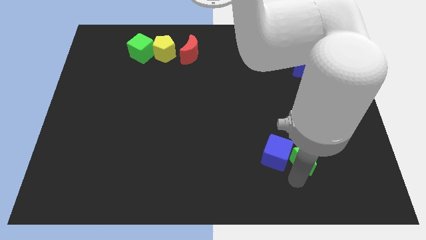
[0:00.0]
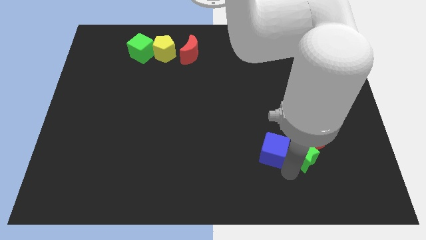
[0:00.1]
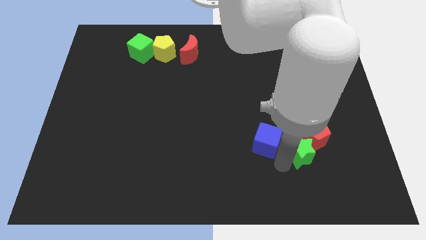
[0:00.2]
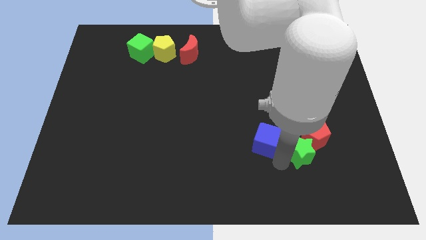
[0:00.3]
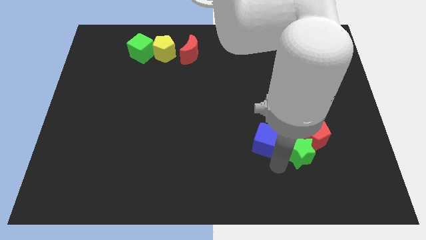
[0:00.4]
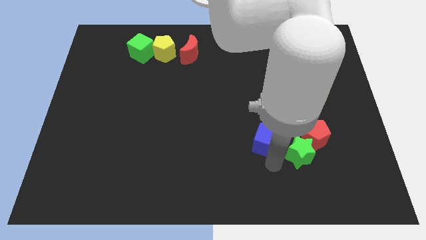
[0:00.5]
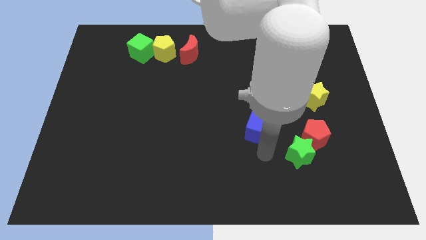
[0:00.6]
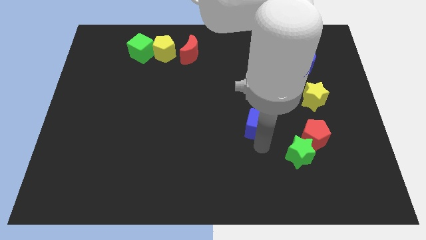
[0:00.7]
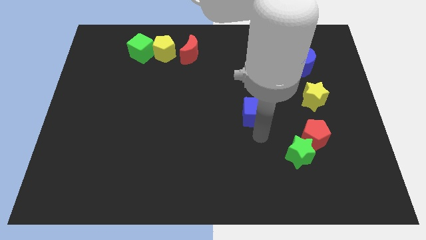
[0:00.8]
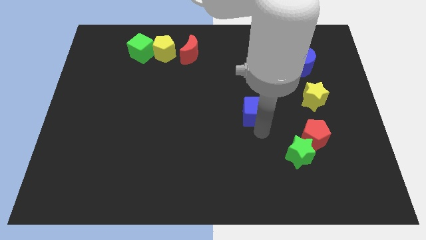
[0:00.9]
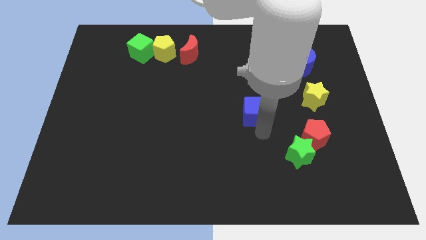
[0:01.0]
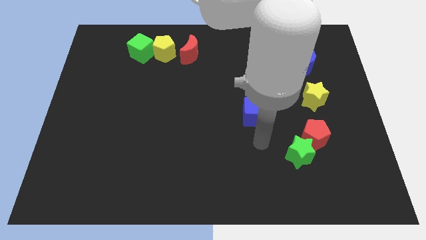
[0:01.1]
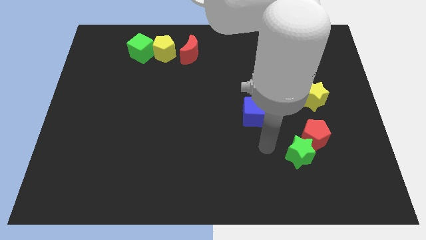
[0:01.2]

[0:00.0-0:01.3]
separate blue cube from green star

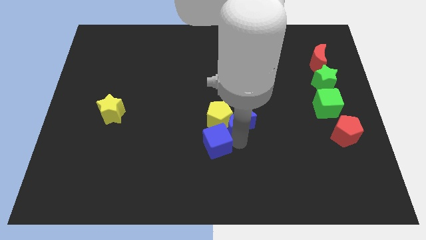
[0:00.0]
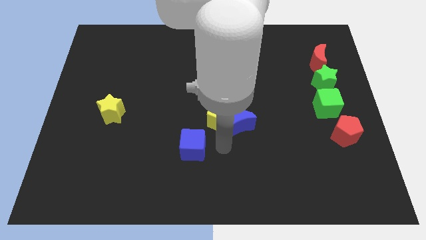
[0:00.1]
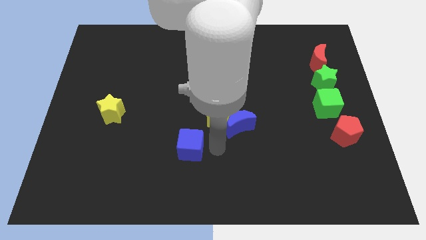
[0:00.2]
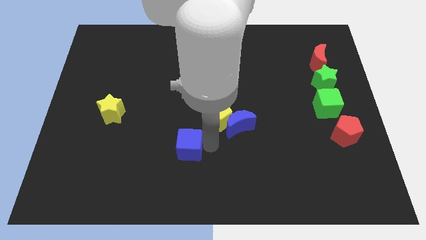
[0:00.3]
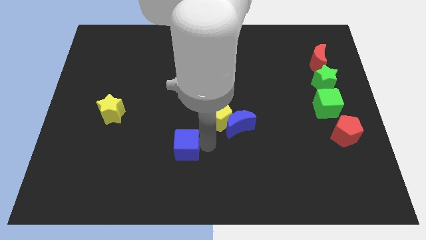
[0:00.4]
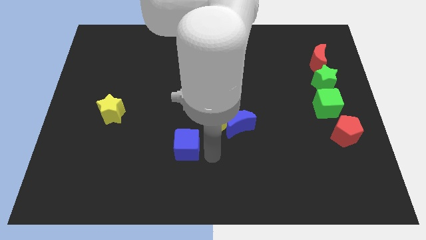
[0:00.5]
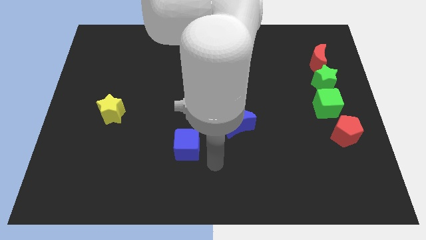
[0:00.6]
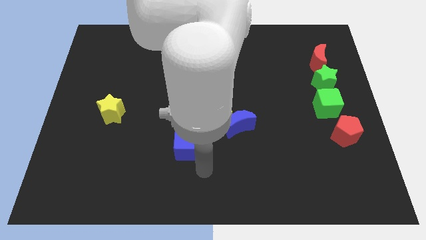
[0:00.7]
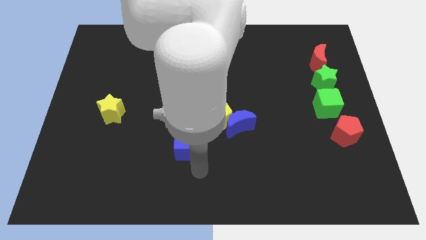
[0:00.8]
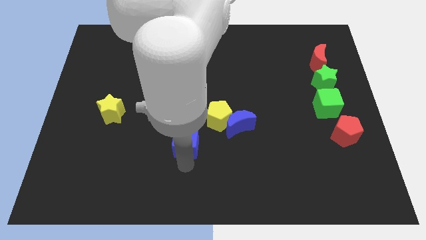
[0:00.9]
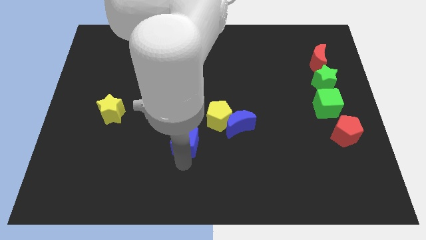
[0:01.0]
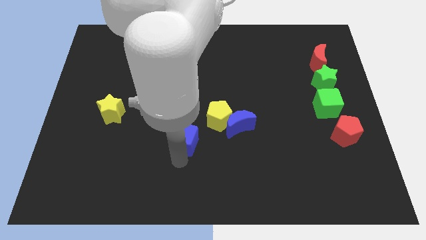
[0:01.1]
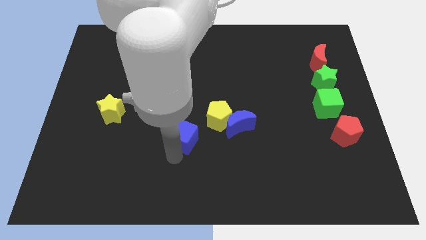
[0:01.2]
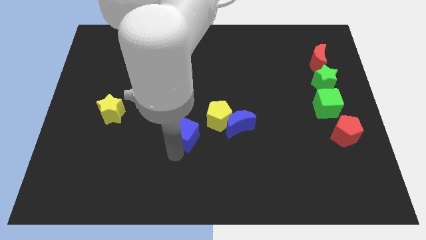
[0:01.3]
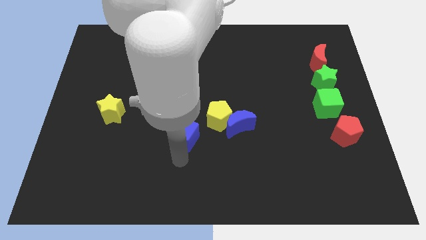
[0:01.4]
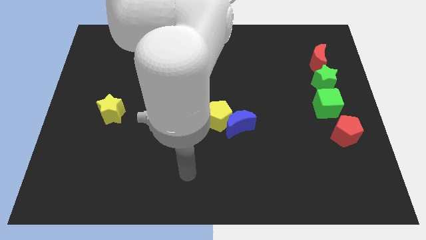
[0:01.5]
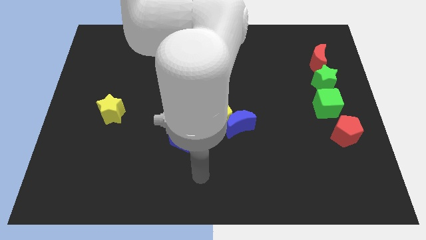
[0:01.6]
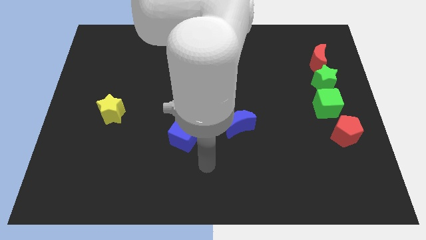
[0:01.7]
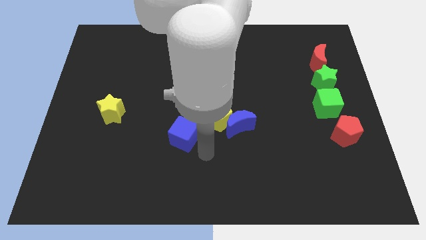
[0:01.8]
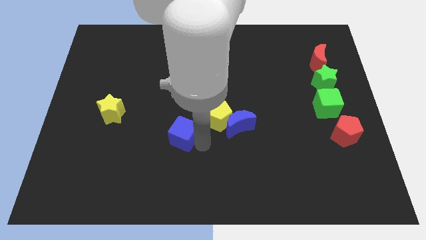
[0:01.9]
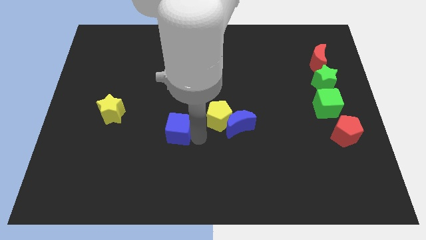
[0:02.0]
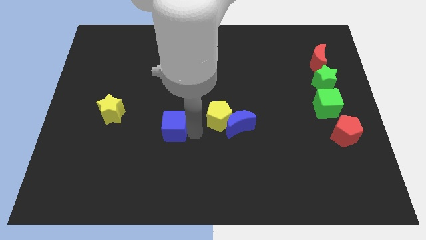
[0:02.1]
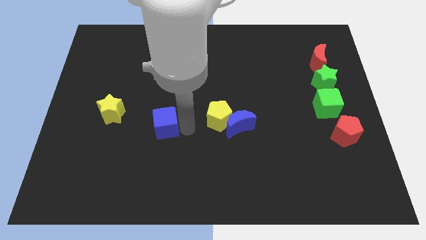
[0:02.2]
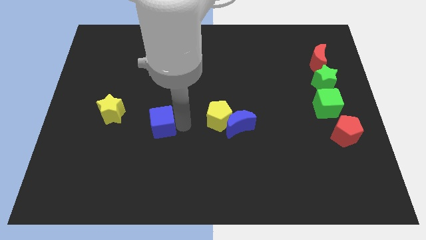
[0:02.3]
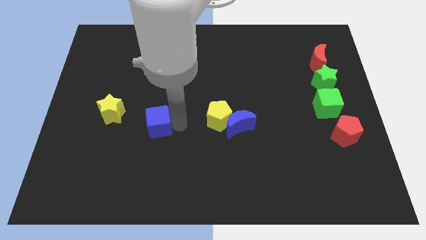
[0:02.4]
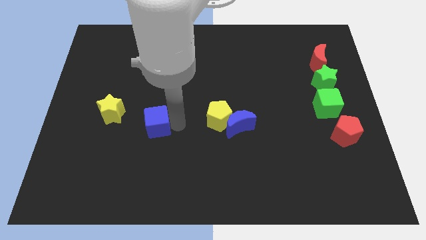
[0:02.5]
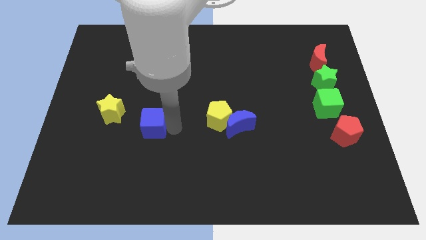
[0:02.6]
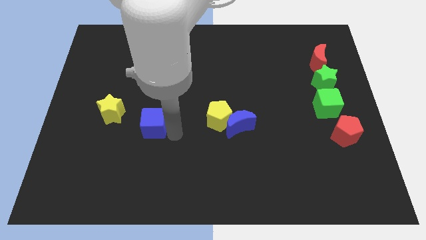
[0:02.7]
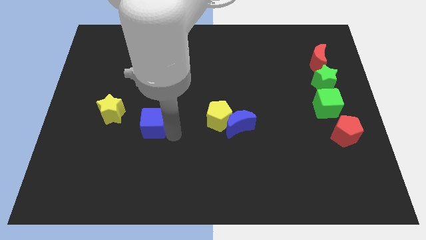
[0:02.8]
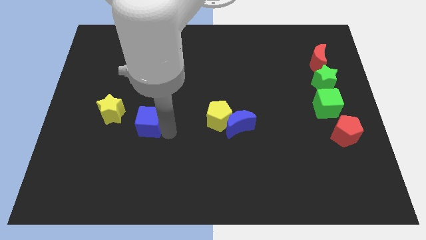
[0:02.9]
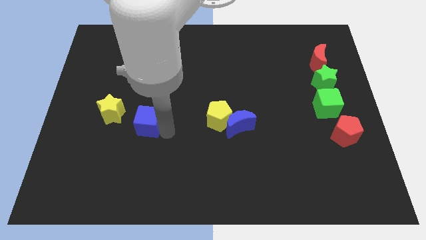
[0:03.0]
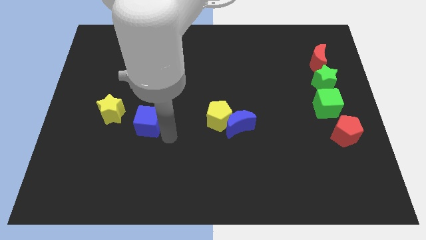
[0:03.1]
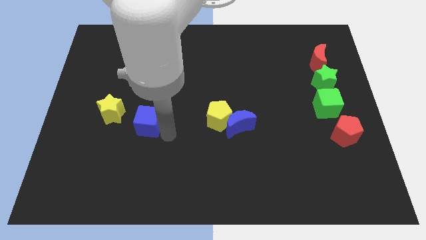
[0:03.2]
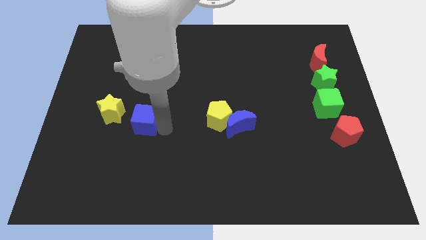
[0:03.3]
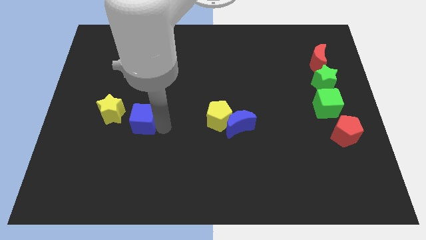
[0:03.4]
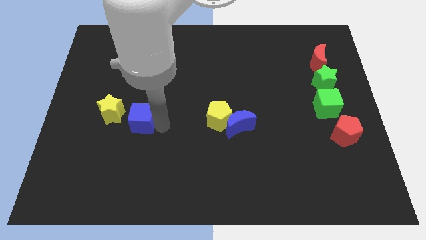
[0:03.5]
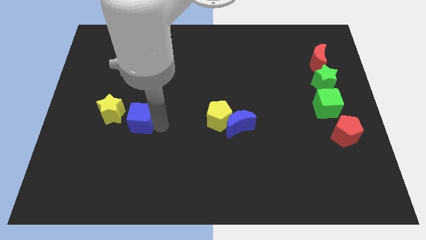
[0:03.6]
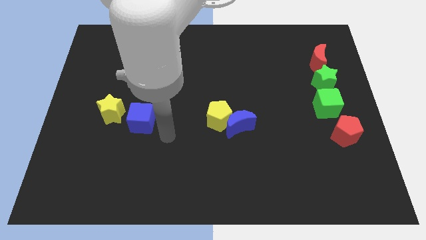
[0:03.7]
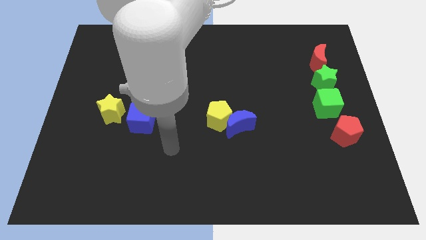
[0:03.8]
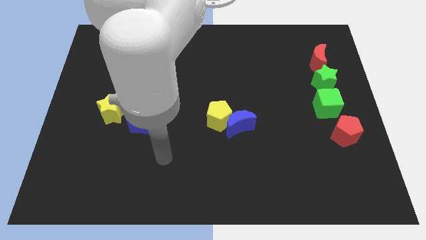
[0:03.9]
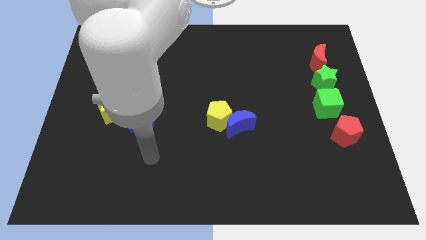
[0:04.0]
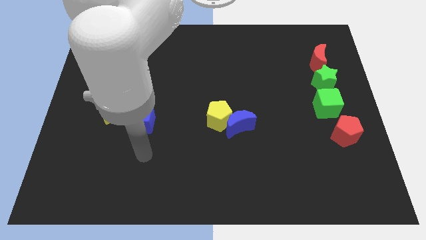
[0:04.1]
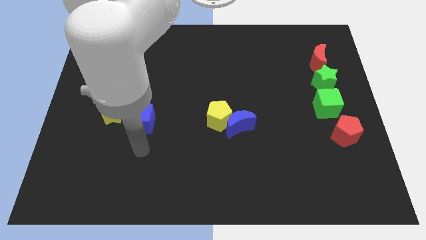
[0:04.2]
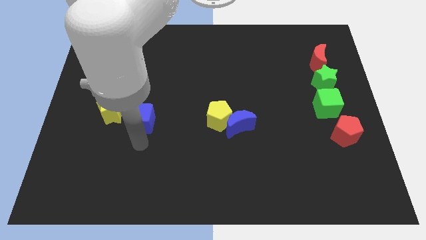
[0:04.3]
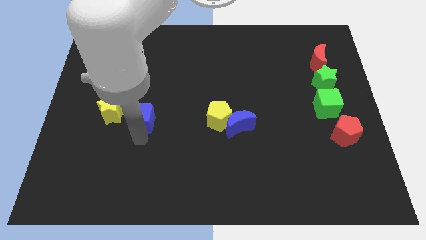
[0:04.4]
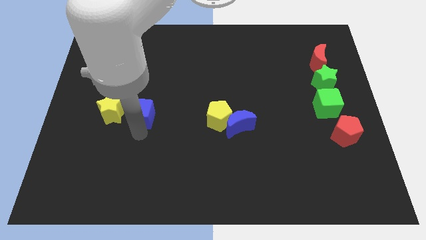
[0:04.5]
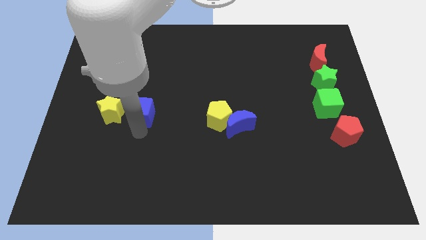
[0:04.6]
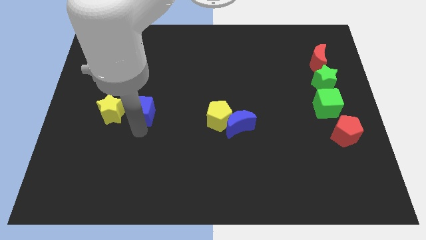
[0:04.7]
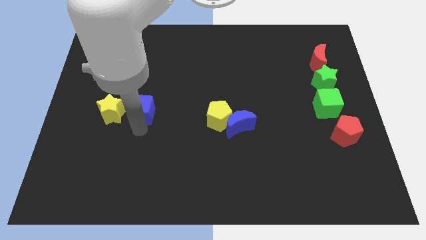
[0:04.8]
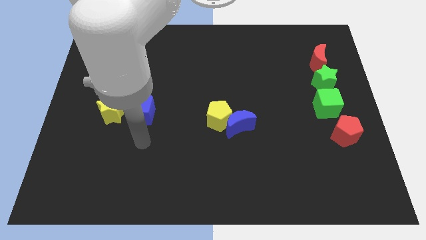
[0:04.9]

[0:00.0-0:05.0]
place the blue cube right side of the yellow star

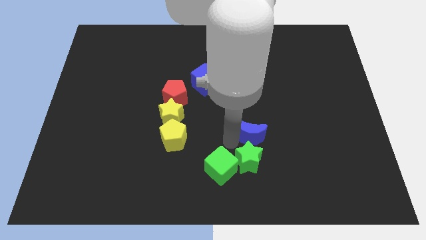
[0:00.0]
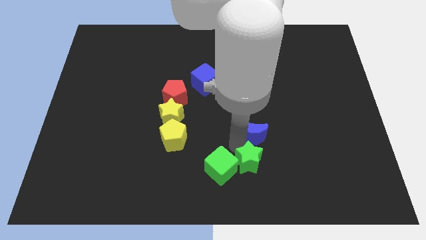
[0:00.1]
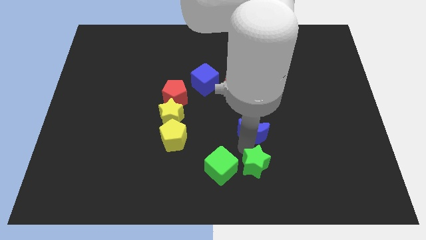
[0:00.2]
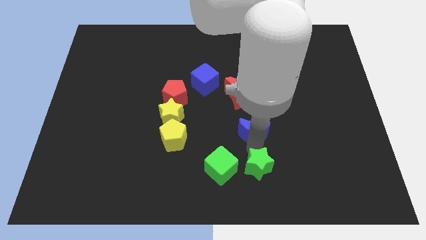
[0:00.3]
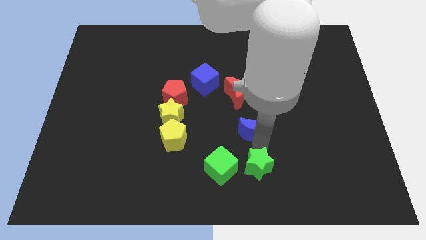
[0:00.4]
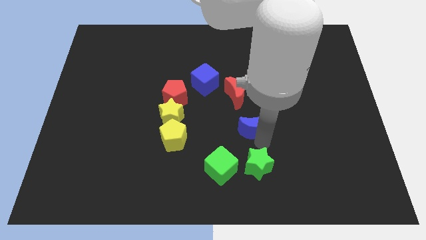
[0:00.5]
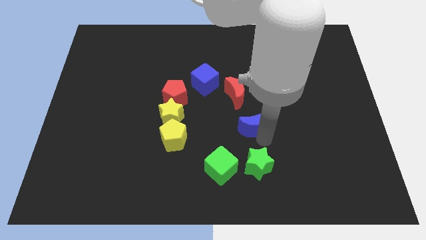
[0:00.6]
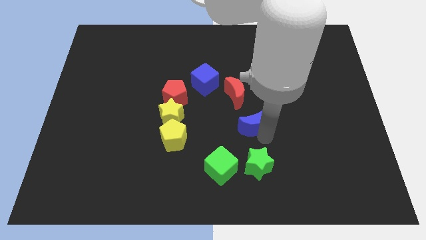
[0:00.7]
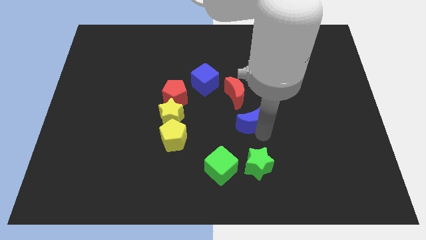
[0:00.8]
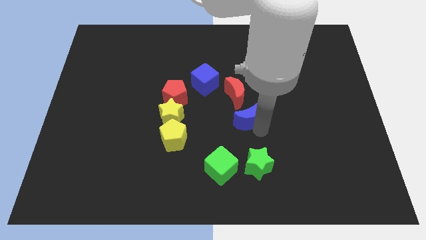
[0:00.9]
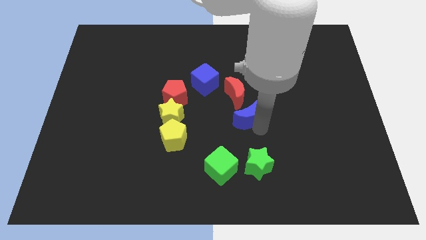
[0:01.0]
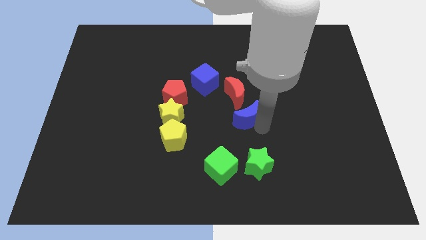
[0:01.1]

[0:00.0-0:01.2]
place blue moon below red moon

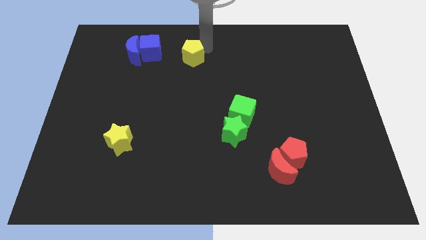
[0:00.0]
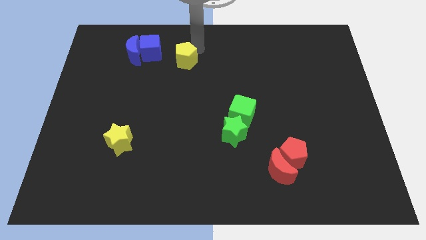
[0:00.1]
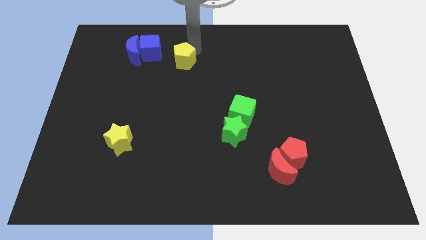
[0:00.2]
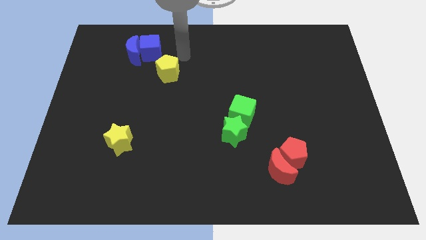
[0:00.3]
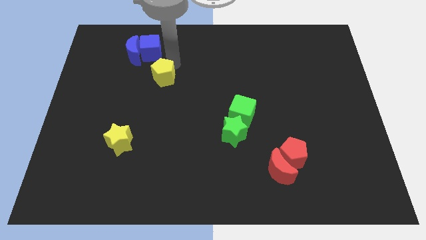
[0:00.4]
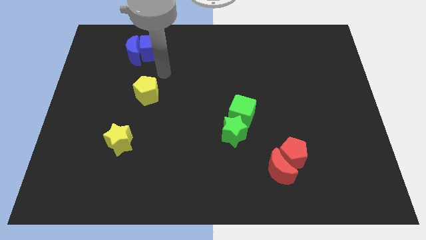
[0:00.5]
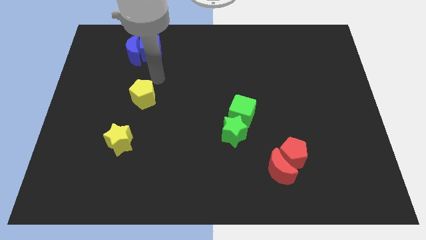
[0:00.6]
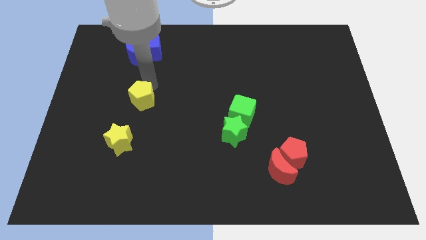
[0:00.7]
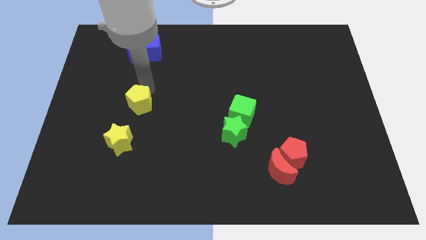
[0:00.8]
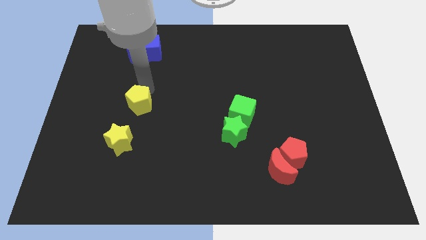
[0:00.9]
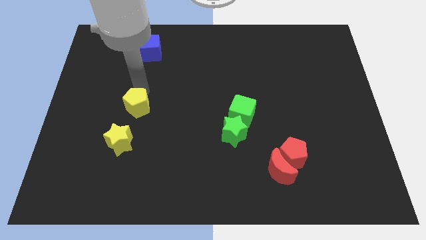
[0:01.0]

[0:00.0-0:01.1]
slide yellow pentagon towards yellow star

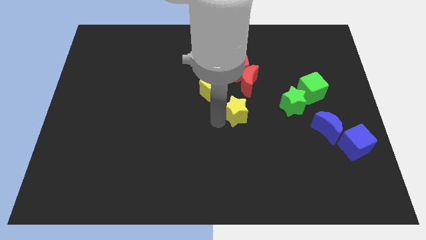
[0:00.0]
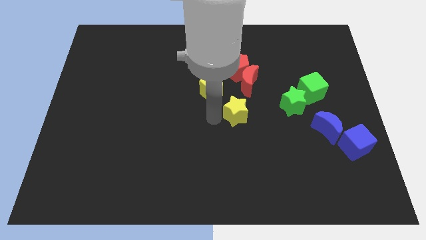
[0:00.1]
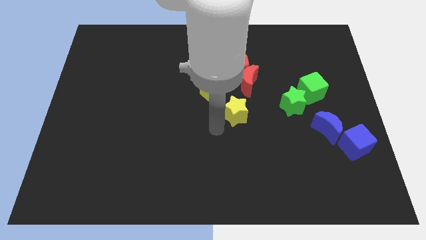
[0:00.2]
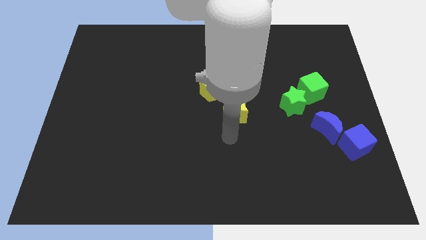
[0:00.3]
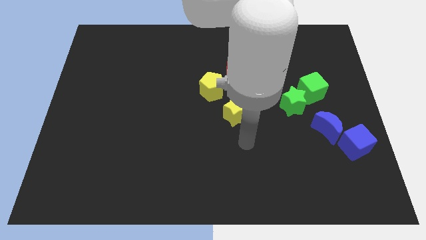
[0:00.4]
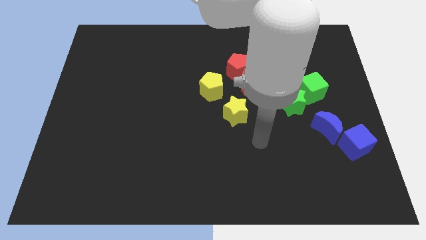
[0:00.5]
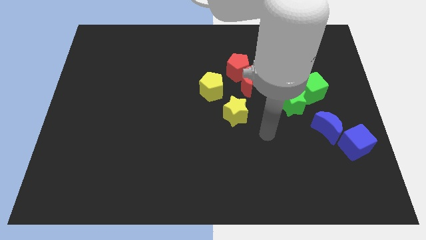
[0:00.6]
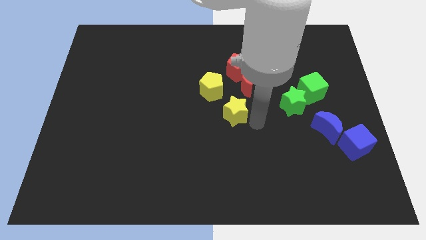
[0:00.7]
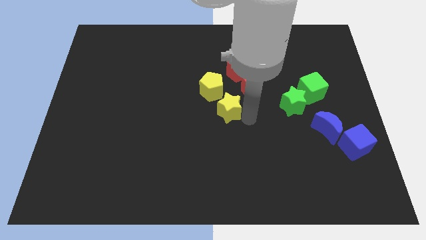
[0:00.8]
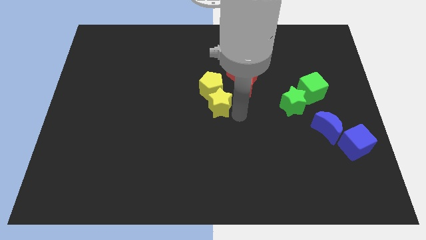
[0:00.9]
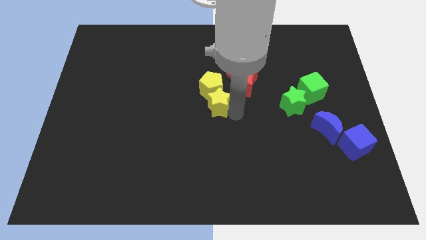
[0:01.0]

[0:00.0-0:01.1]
push the yellow star to the below of the yellow pentagon
